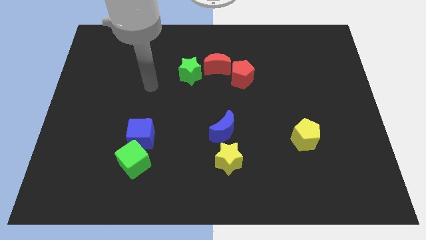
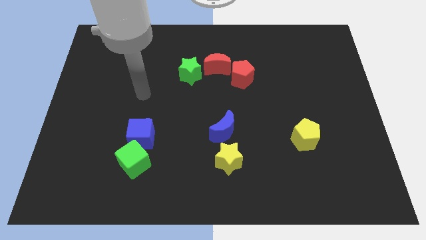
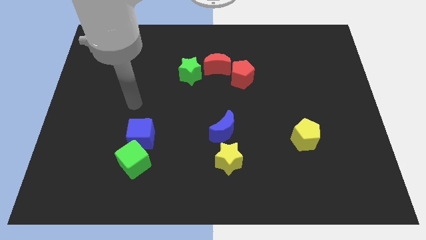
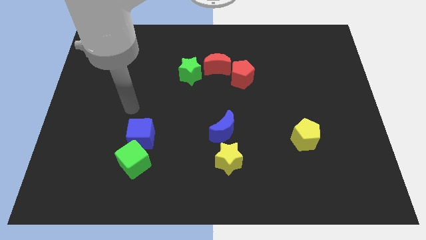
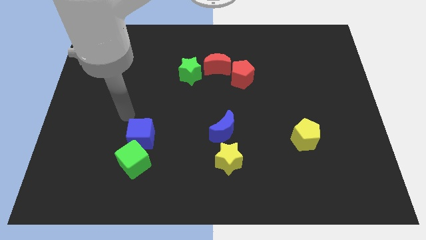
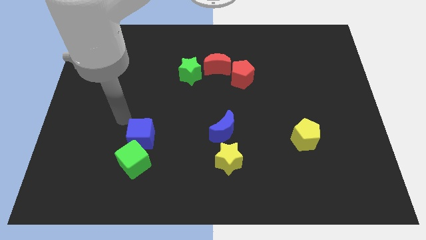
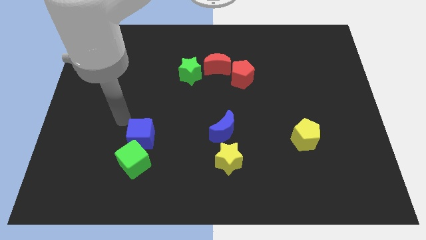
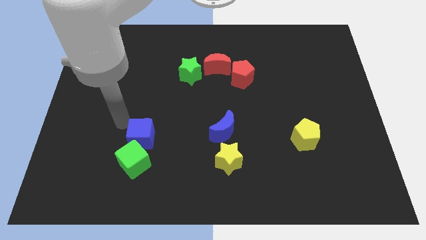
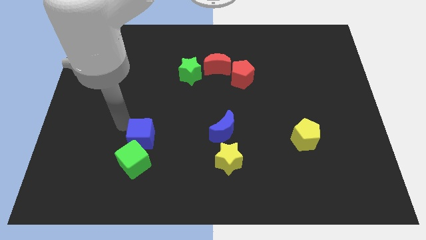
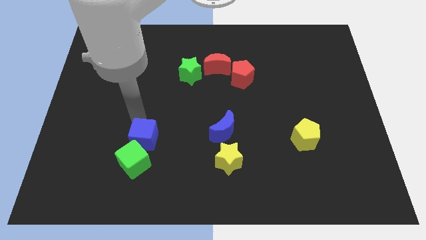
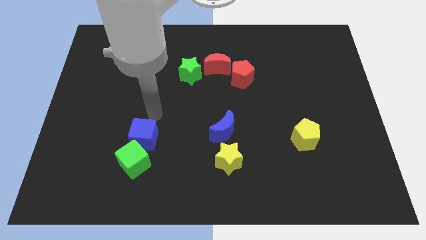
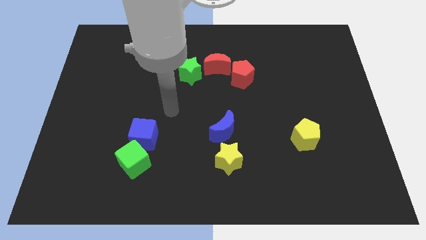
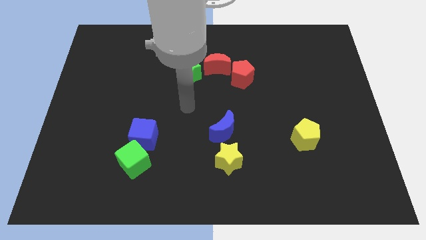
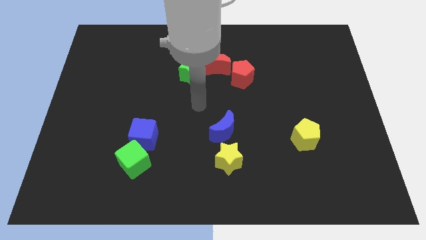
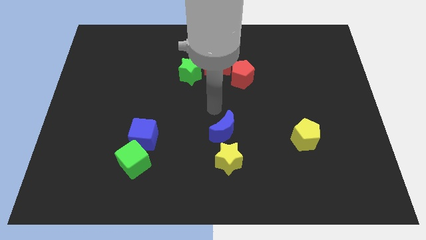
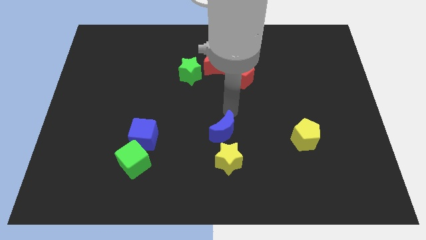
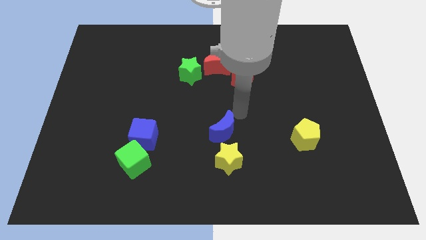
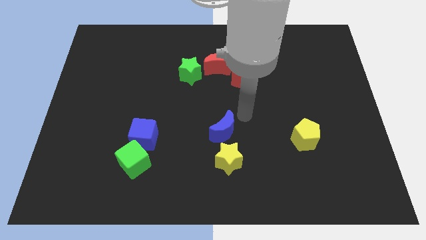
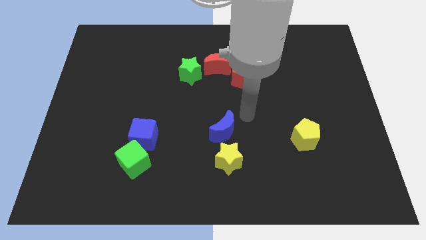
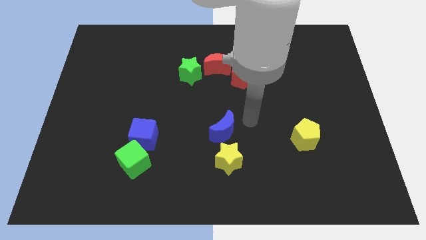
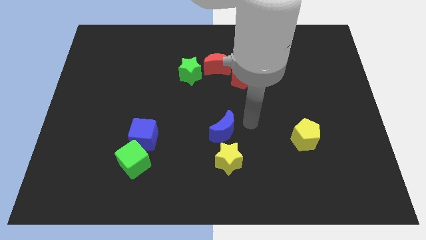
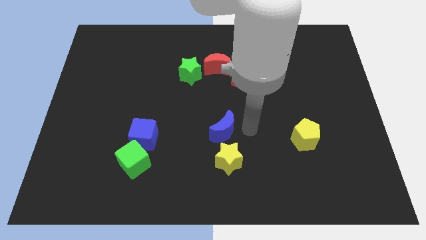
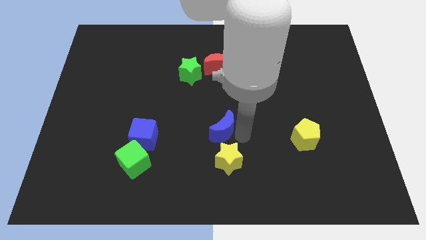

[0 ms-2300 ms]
slightly move the blue cube above the green cube

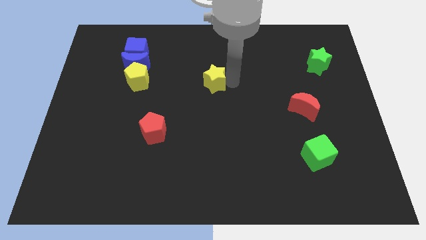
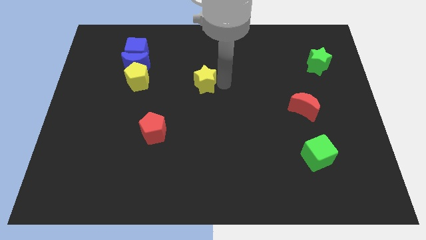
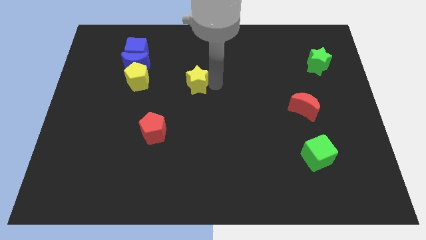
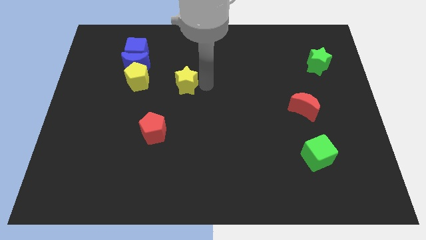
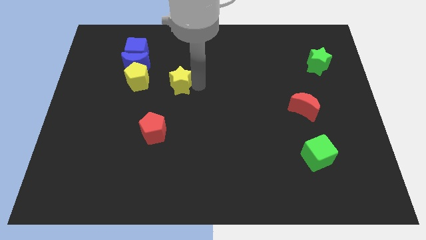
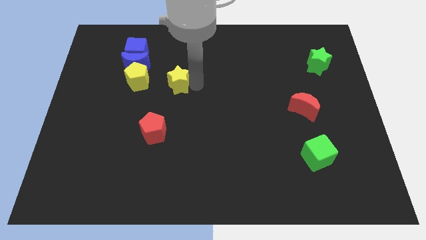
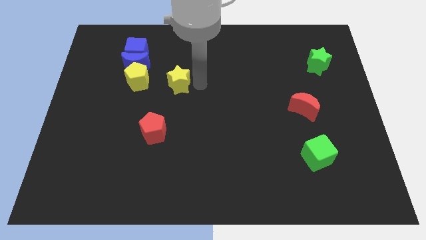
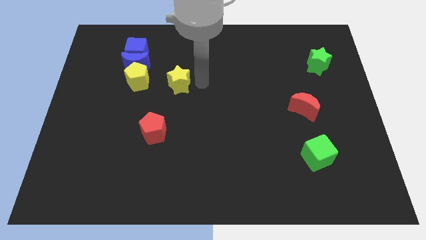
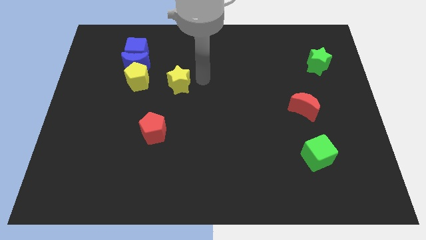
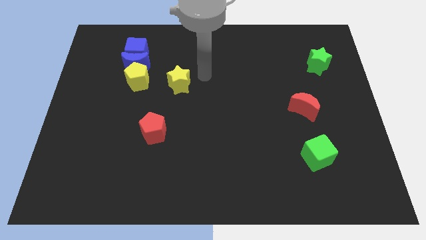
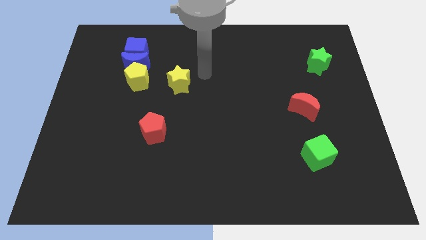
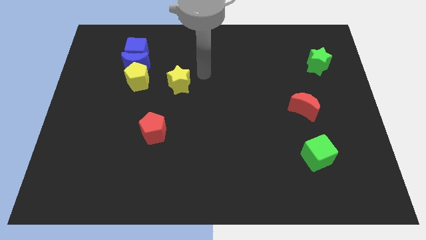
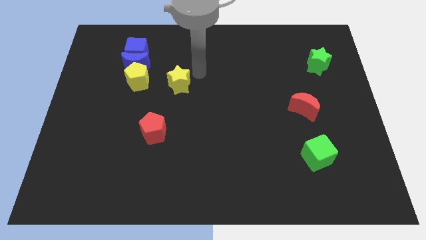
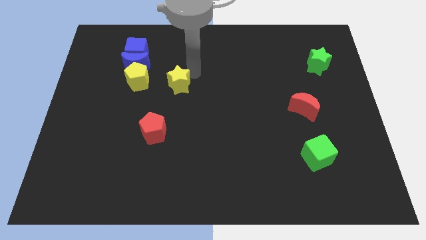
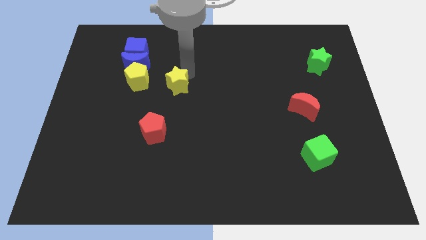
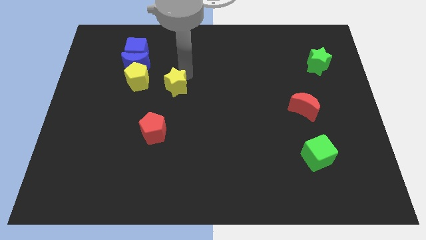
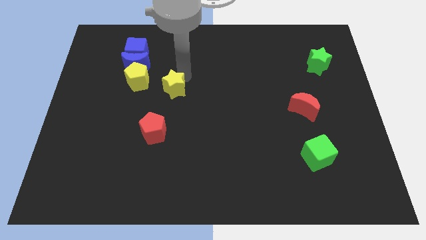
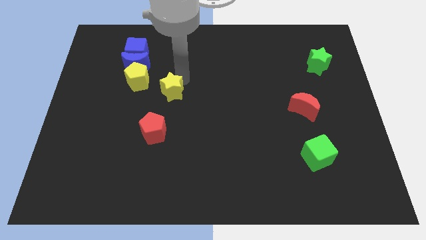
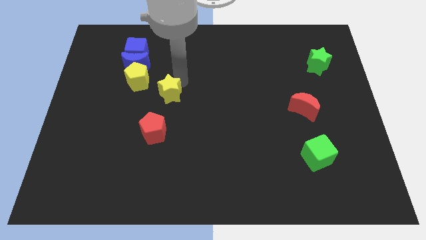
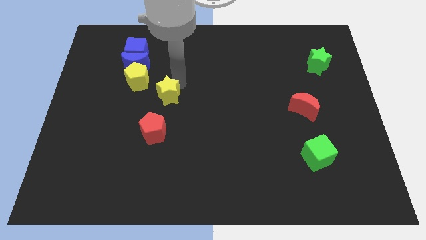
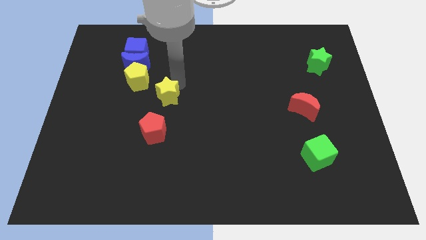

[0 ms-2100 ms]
move the yellow star to the bottom right of the yellow pentagon

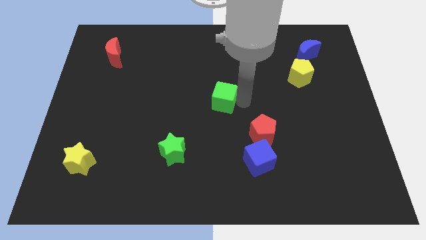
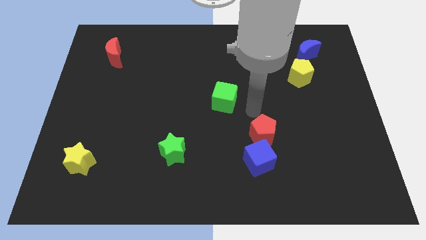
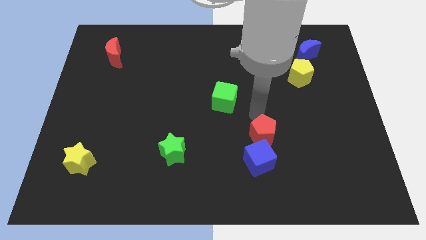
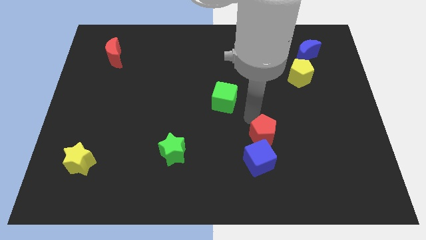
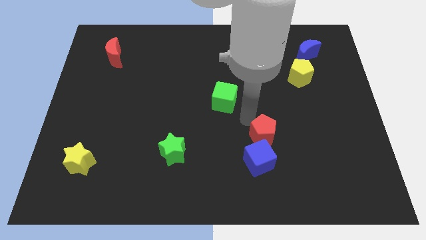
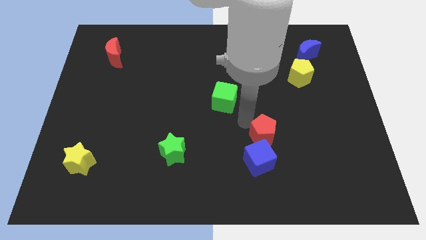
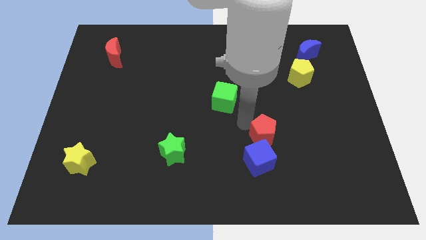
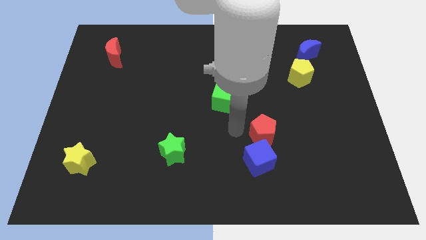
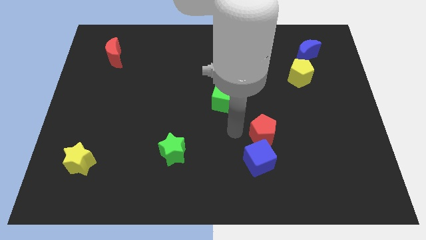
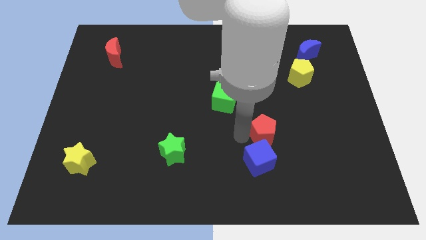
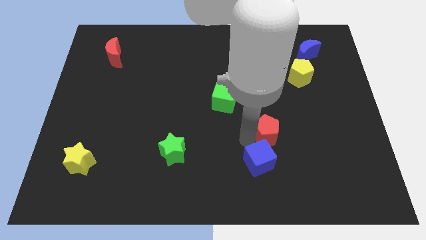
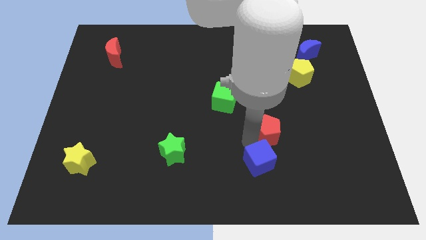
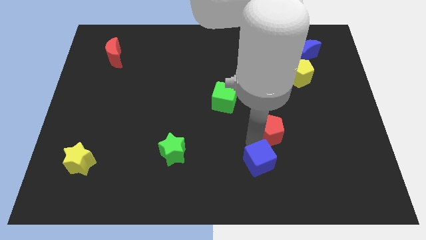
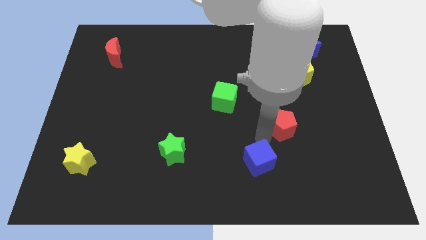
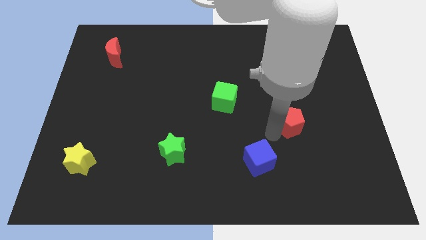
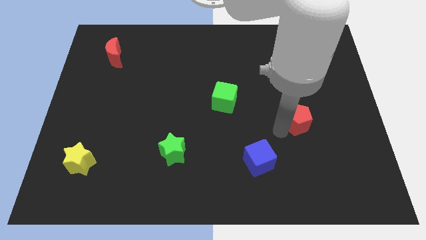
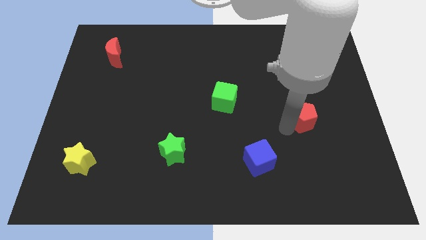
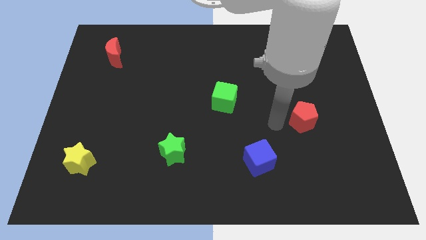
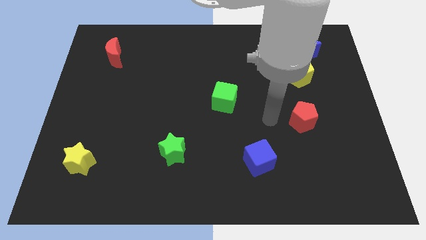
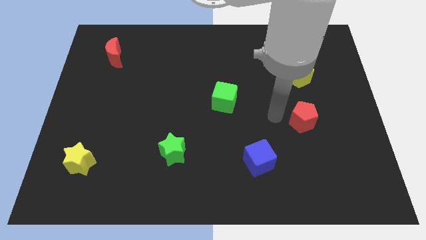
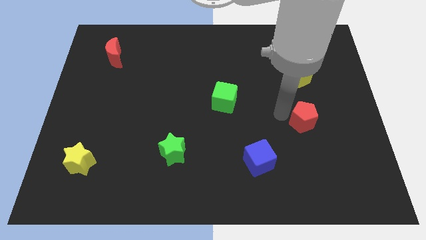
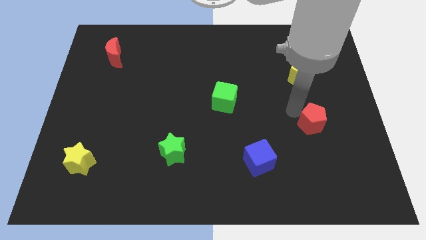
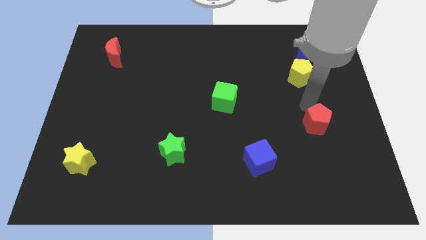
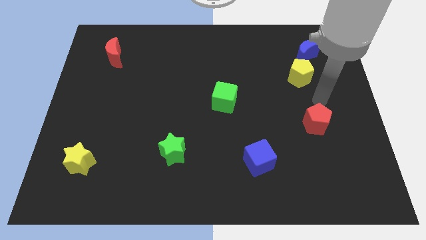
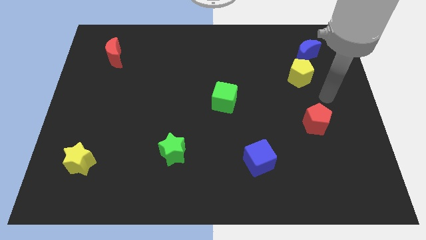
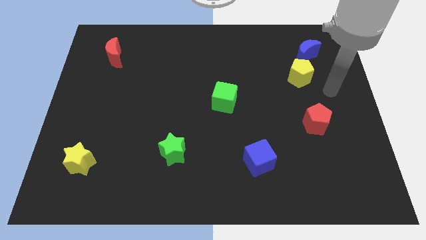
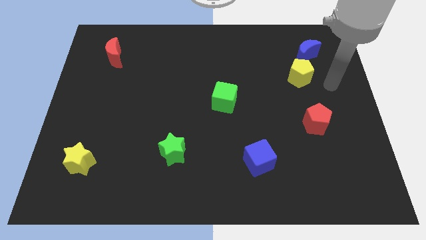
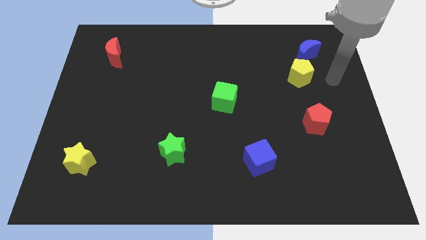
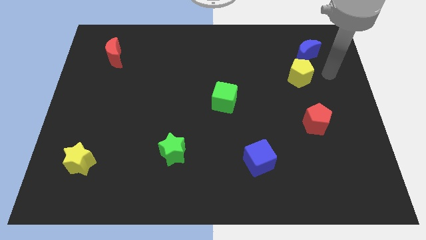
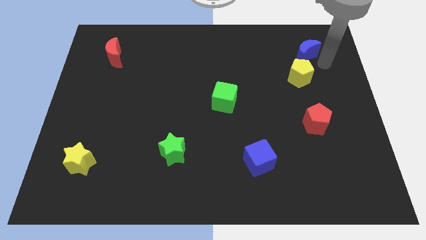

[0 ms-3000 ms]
move red pentagon towards the center right of the board

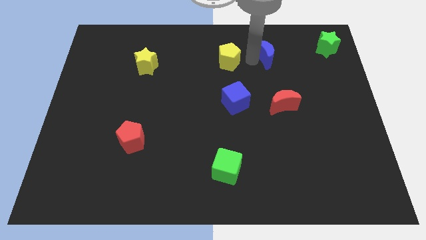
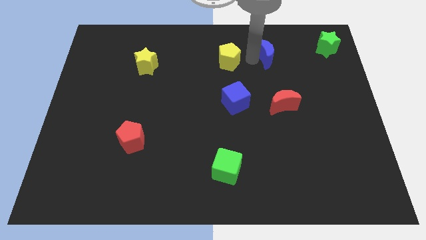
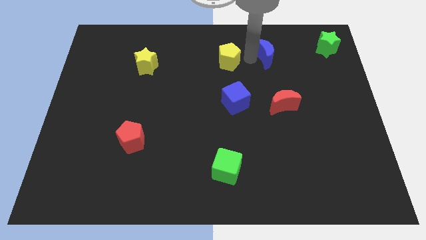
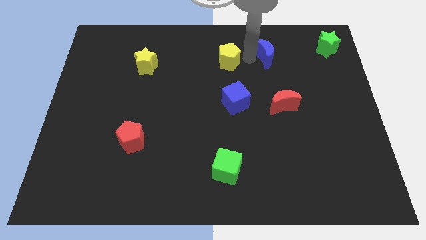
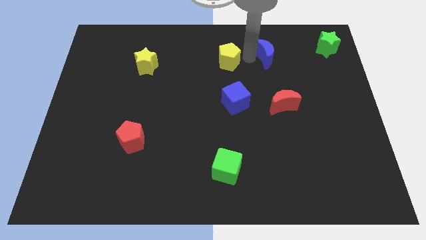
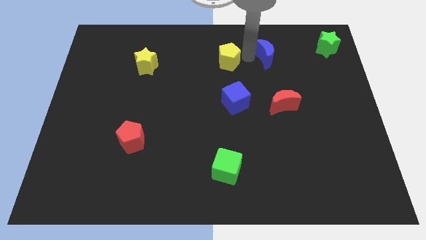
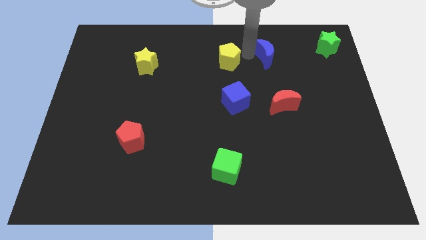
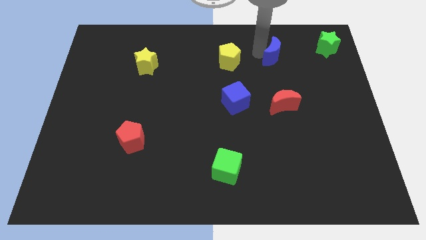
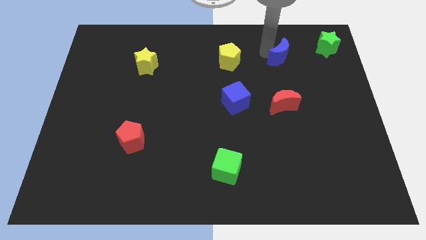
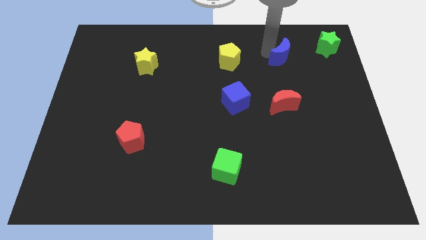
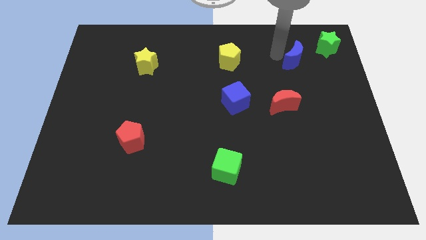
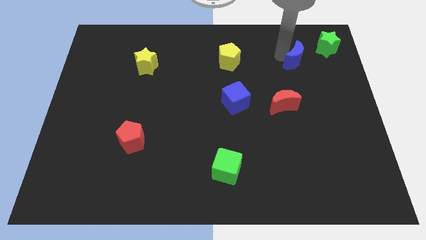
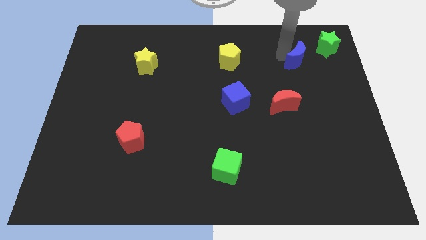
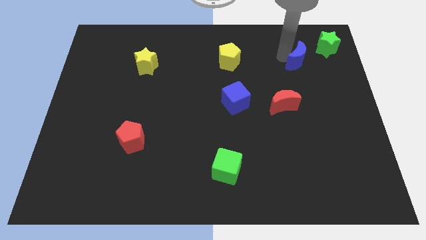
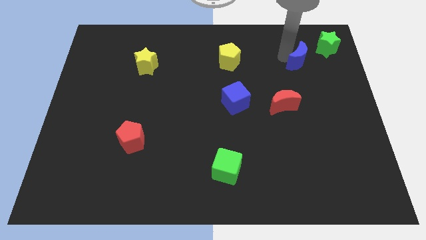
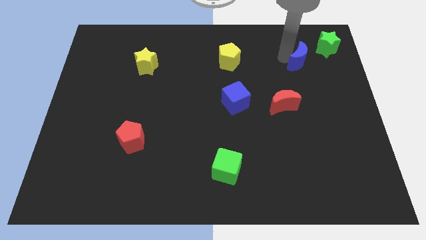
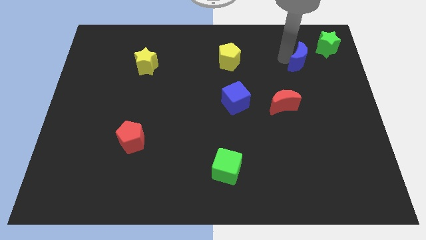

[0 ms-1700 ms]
separate the blue crescent from the yellow pentagon
